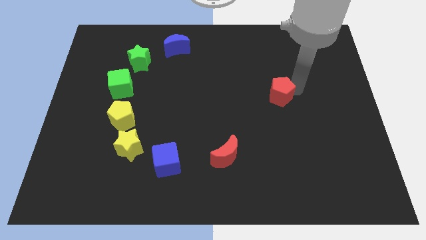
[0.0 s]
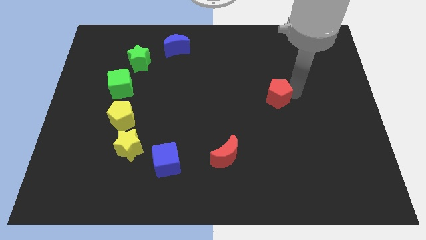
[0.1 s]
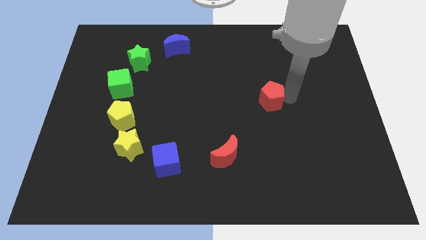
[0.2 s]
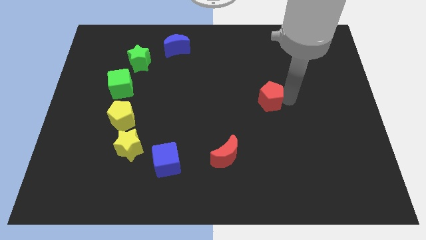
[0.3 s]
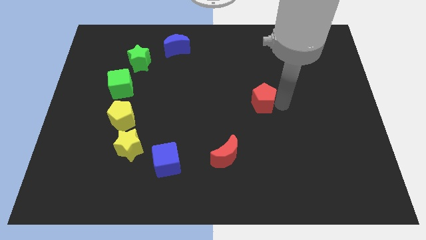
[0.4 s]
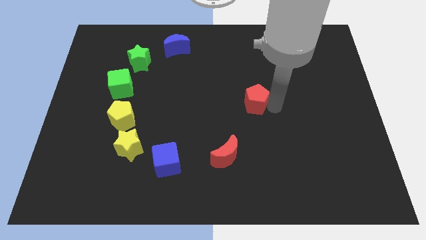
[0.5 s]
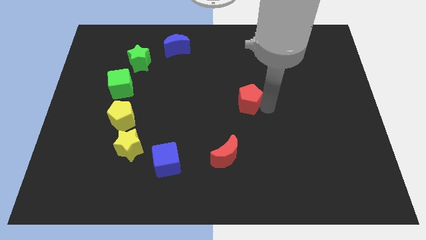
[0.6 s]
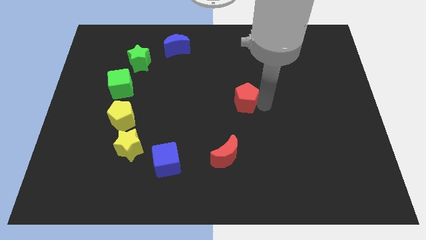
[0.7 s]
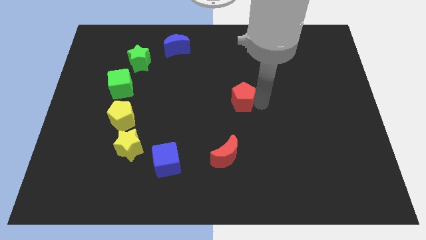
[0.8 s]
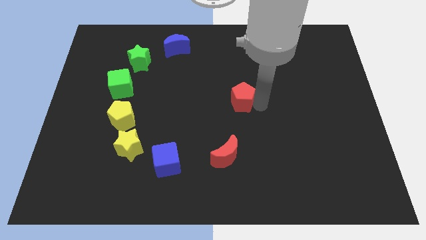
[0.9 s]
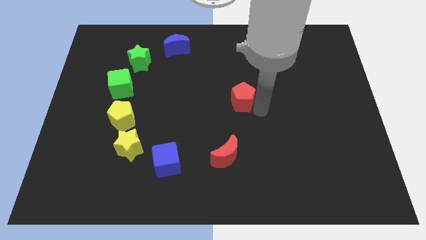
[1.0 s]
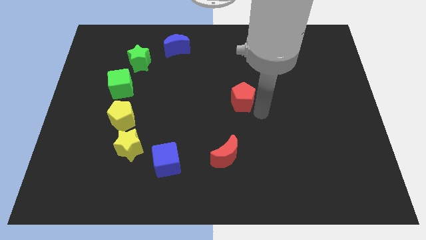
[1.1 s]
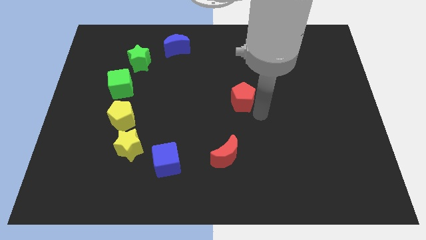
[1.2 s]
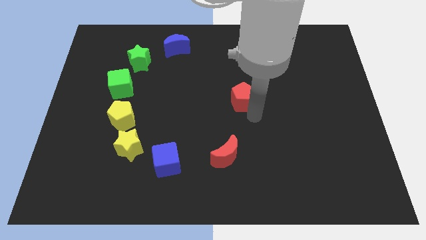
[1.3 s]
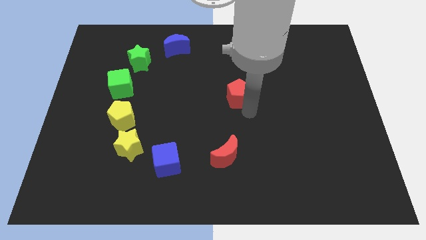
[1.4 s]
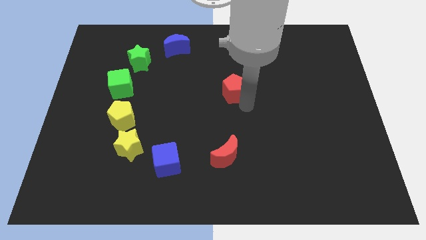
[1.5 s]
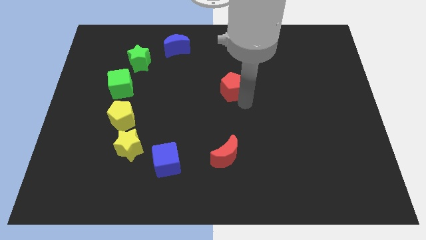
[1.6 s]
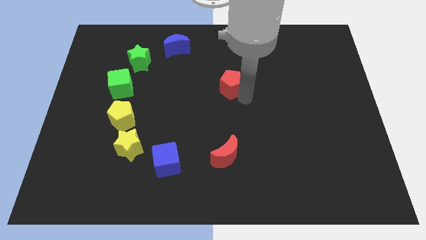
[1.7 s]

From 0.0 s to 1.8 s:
push the red pentagon to the center of the board

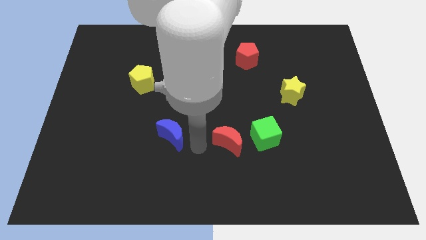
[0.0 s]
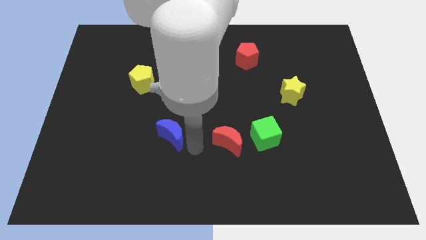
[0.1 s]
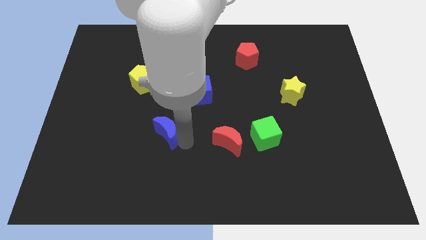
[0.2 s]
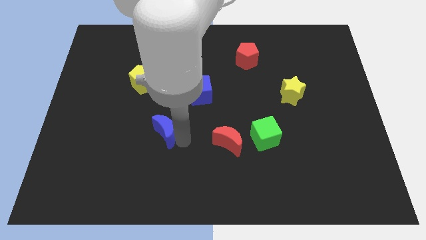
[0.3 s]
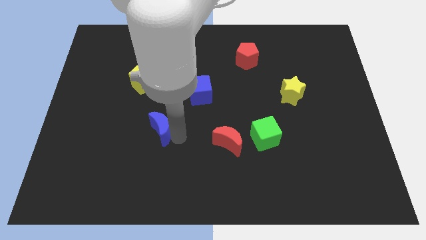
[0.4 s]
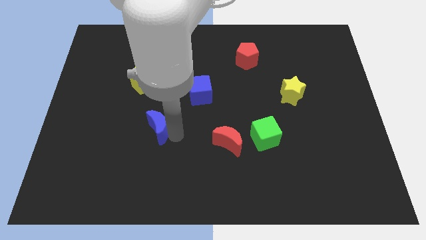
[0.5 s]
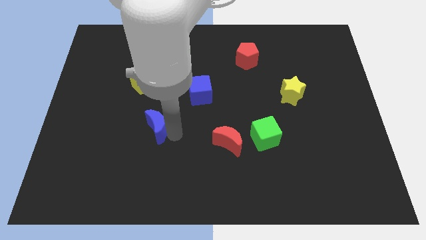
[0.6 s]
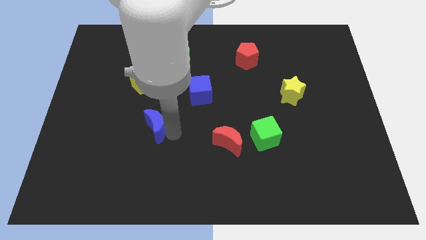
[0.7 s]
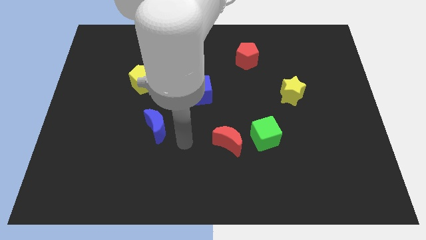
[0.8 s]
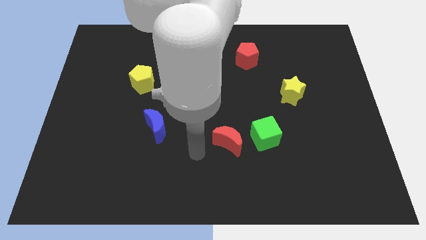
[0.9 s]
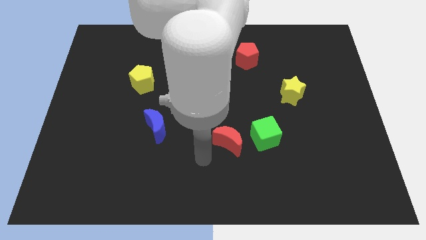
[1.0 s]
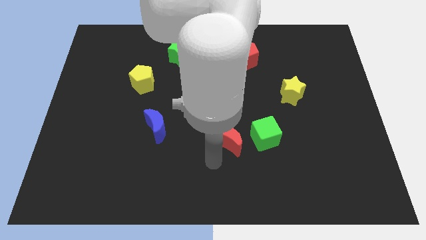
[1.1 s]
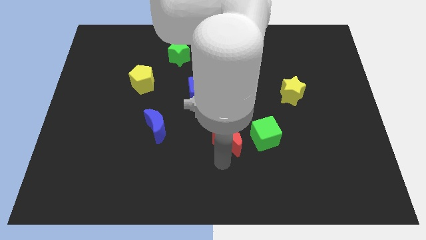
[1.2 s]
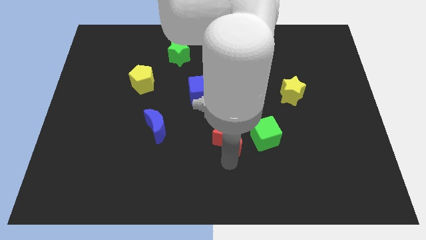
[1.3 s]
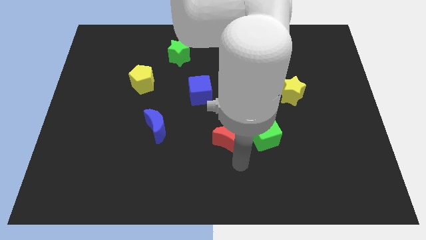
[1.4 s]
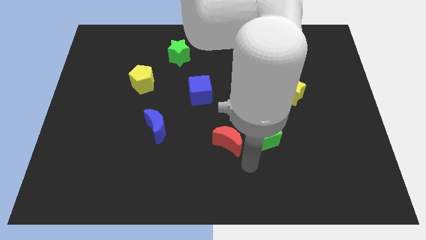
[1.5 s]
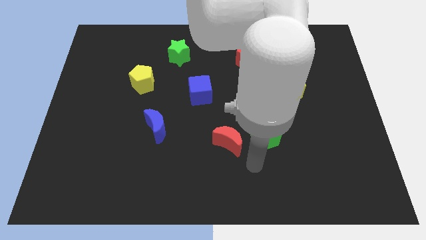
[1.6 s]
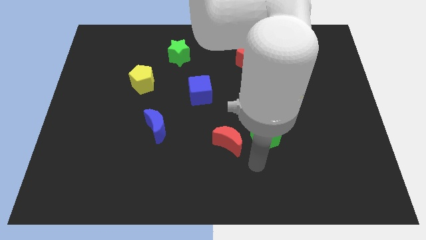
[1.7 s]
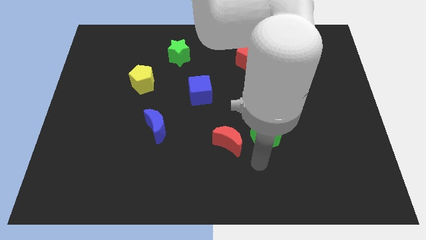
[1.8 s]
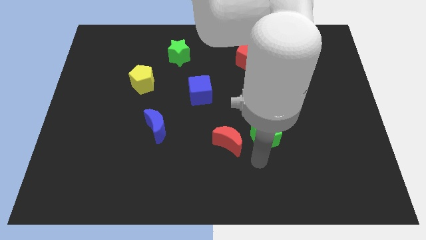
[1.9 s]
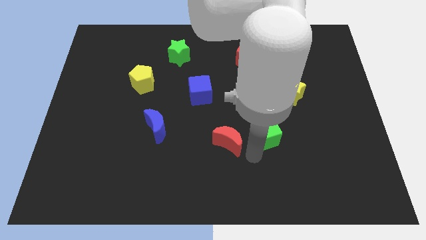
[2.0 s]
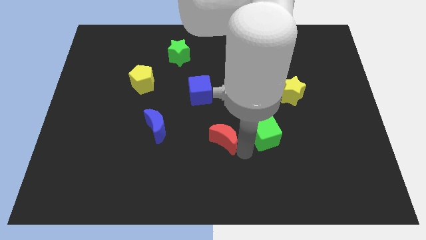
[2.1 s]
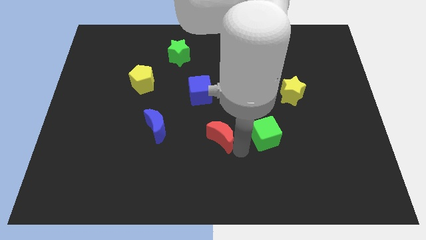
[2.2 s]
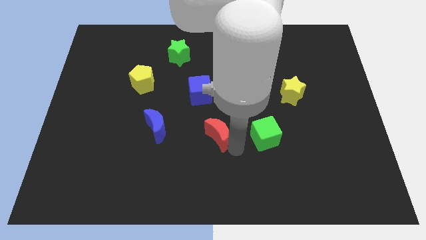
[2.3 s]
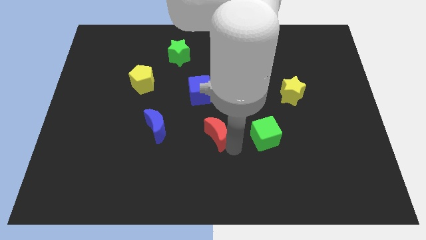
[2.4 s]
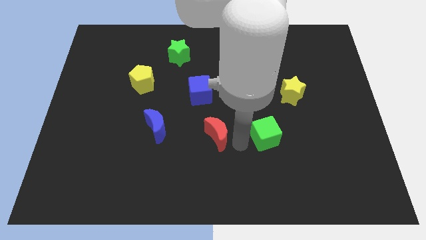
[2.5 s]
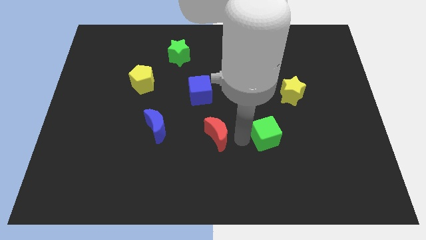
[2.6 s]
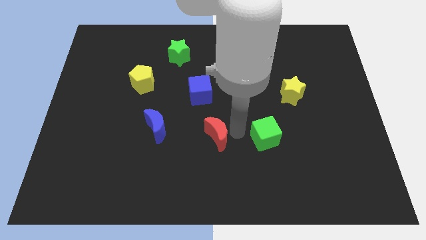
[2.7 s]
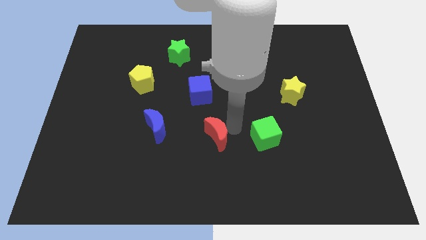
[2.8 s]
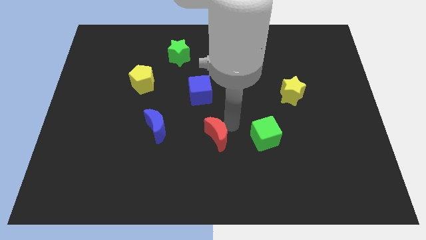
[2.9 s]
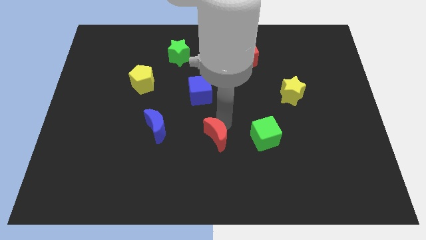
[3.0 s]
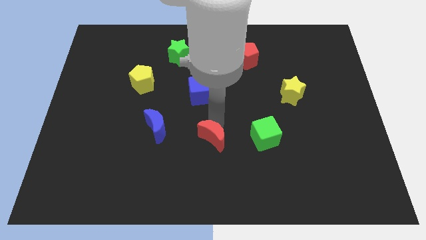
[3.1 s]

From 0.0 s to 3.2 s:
move the blue moon and red moon diagonally on the bottom right side of the yellow pentagon

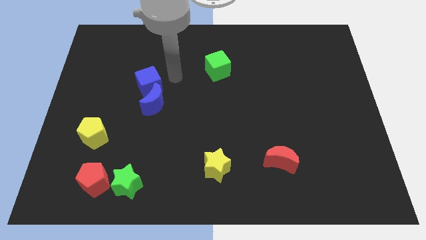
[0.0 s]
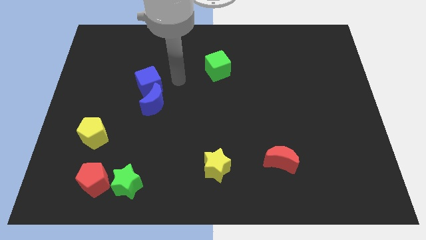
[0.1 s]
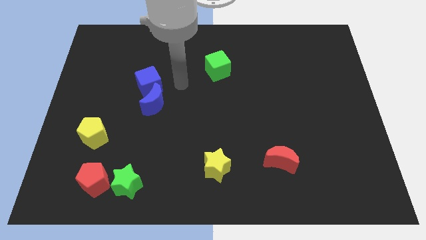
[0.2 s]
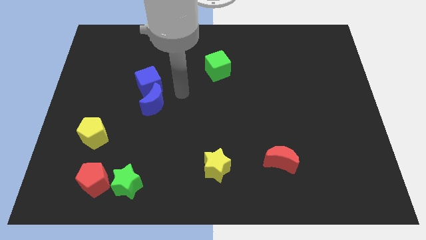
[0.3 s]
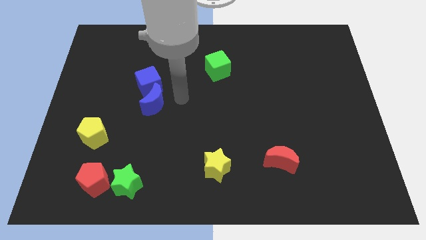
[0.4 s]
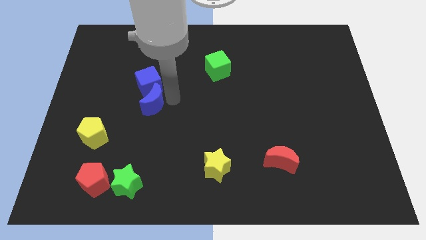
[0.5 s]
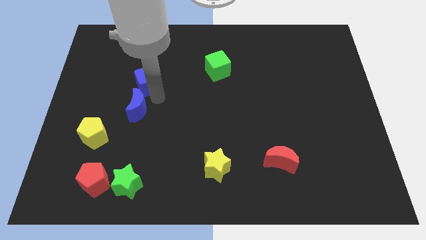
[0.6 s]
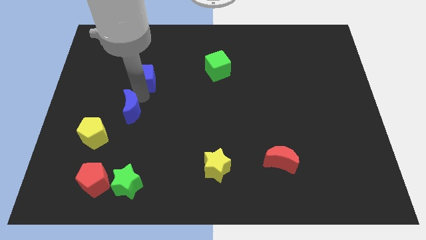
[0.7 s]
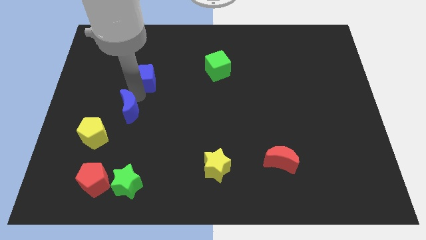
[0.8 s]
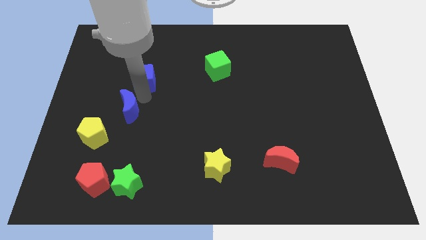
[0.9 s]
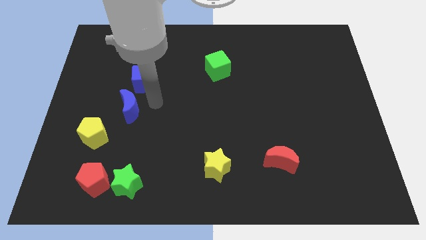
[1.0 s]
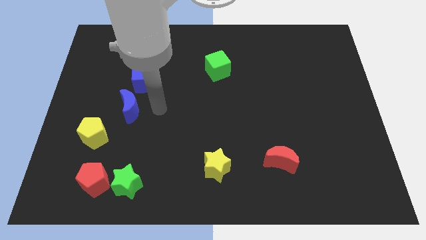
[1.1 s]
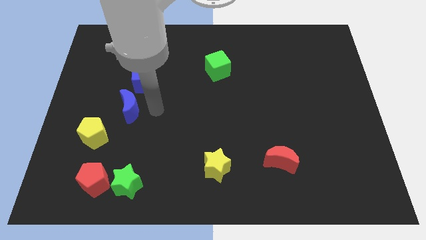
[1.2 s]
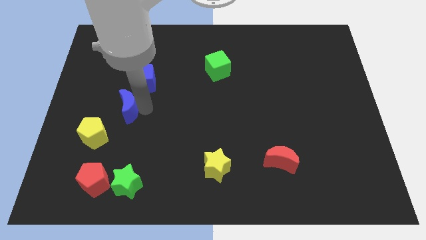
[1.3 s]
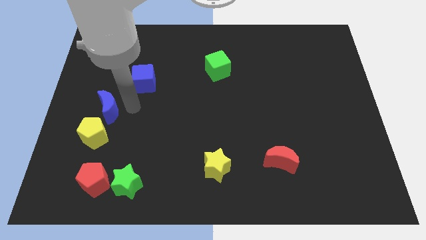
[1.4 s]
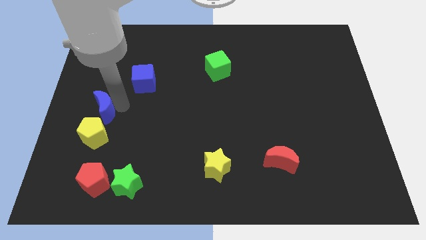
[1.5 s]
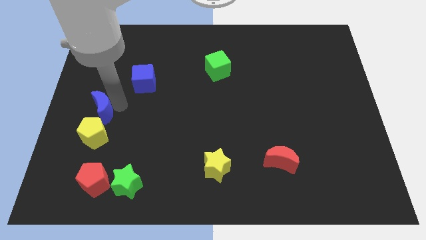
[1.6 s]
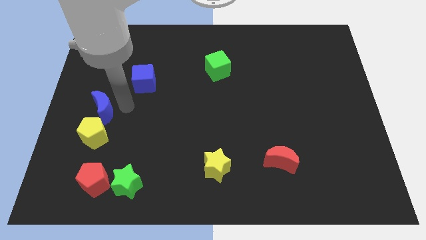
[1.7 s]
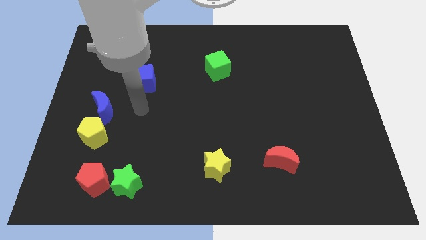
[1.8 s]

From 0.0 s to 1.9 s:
separate the blue moon from the blue cube

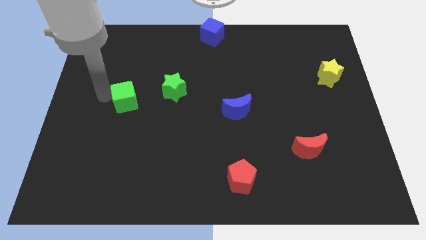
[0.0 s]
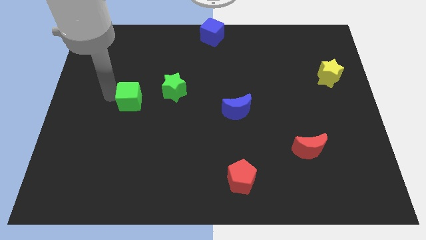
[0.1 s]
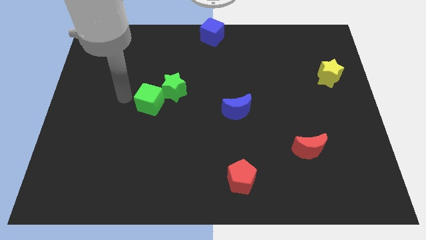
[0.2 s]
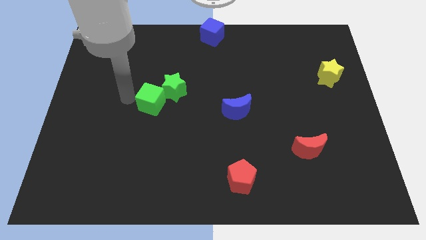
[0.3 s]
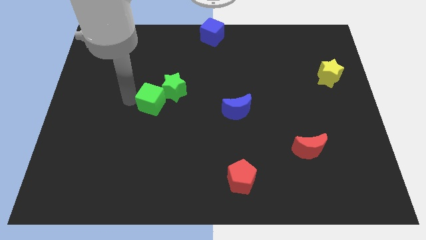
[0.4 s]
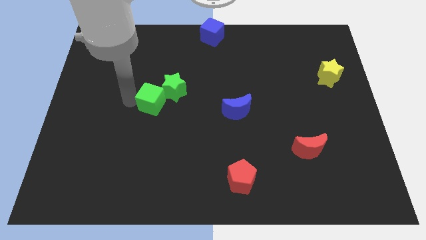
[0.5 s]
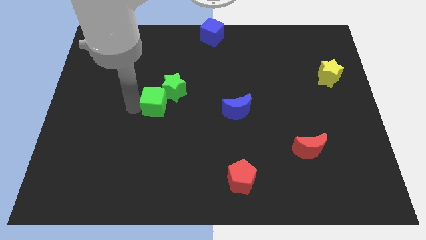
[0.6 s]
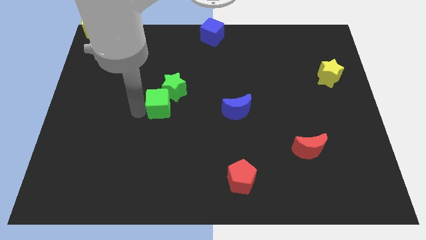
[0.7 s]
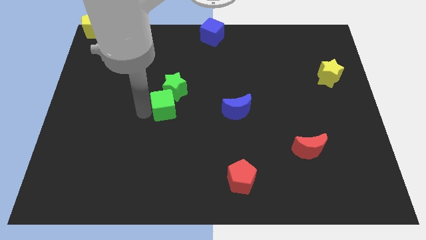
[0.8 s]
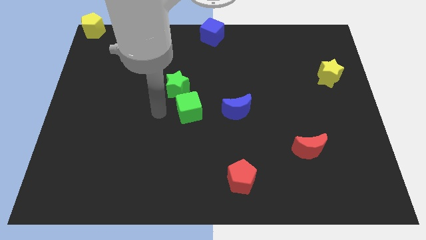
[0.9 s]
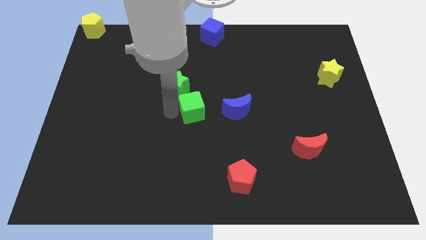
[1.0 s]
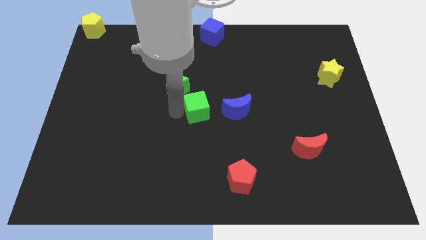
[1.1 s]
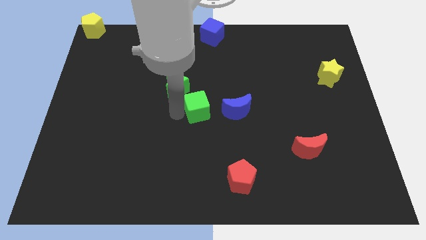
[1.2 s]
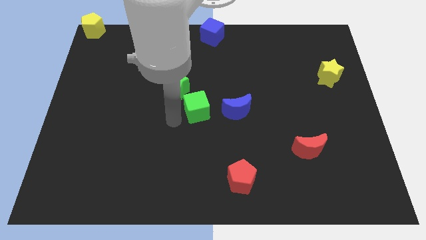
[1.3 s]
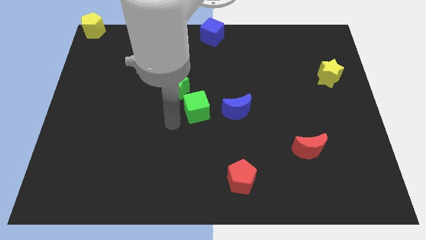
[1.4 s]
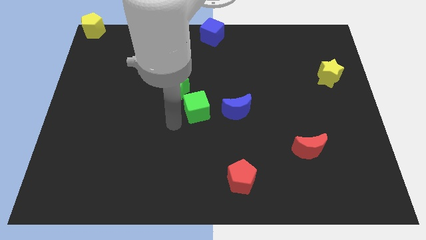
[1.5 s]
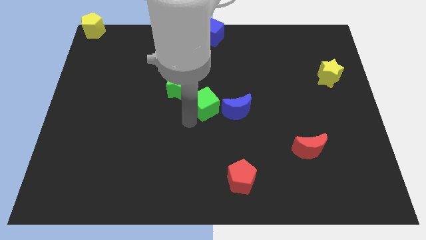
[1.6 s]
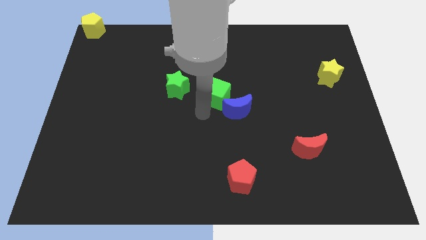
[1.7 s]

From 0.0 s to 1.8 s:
push the green cube into the blue moon

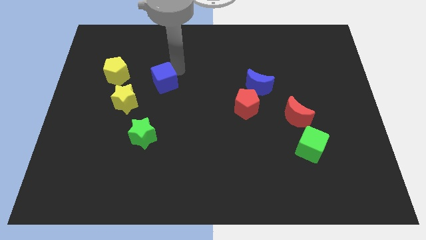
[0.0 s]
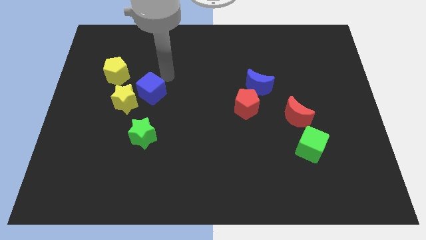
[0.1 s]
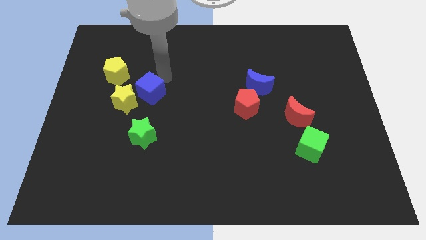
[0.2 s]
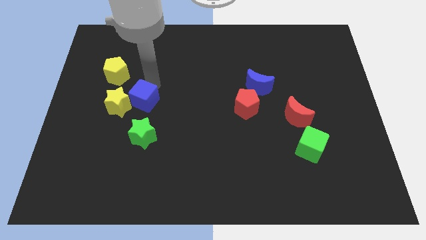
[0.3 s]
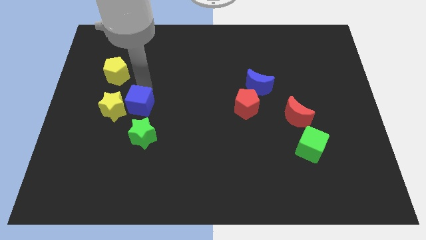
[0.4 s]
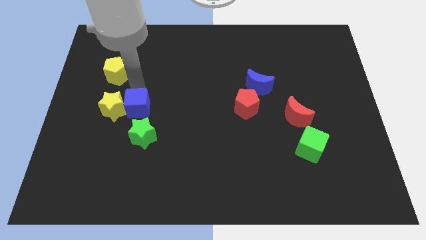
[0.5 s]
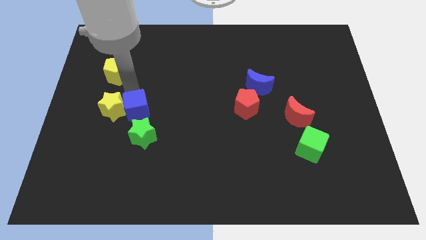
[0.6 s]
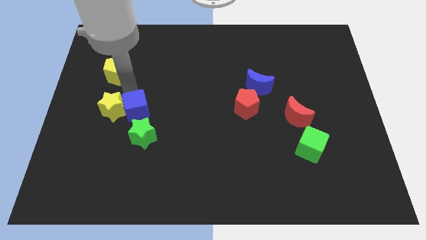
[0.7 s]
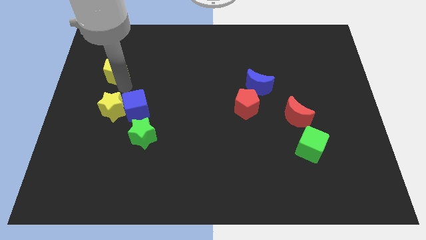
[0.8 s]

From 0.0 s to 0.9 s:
touch the yellow star with blue cube
